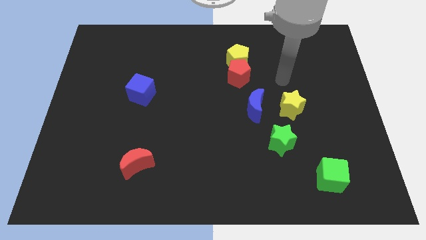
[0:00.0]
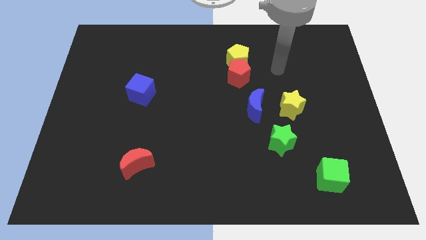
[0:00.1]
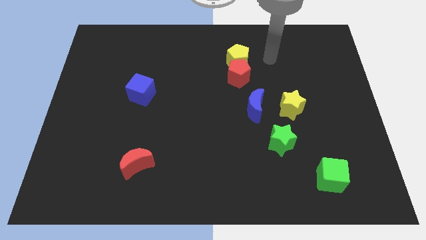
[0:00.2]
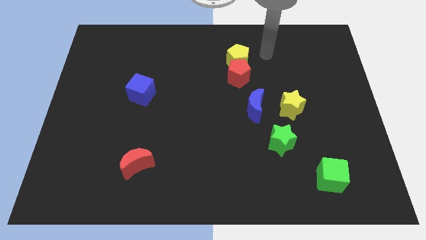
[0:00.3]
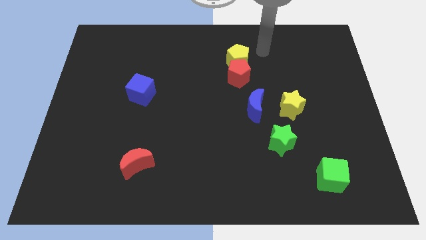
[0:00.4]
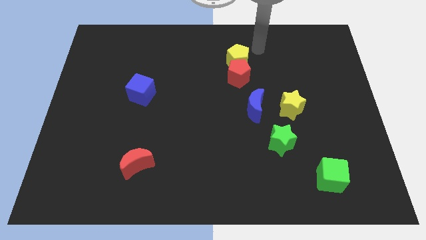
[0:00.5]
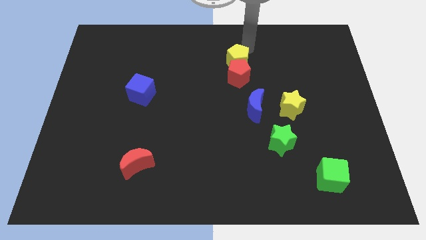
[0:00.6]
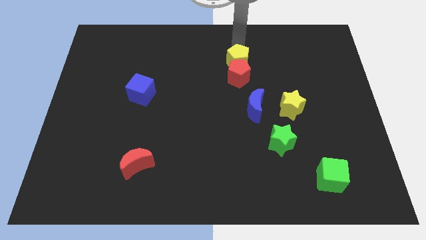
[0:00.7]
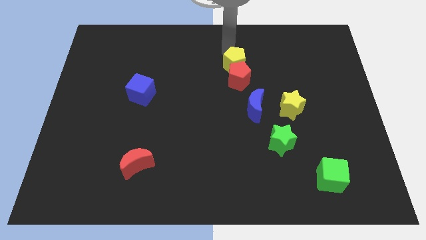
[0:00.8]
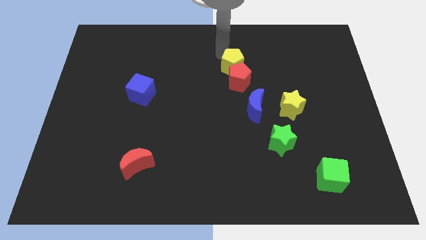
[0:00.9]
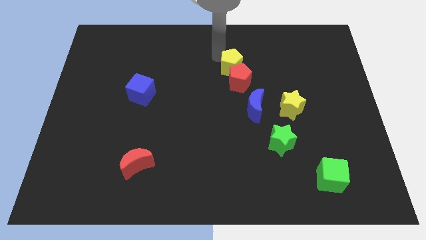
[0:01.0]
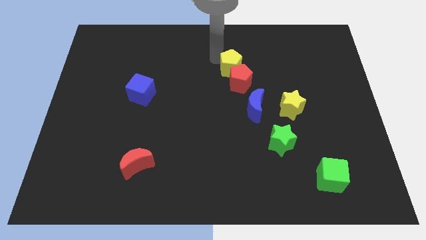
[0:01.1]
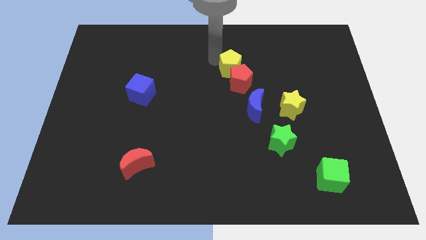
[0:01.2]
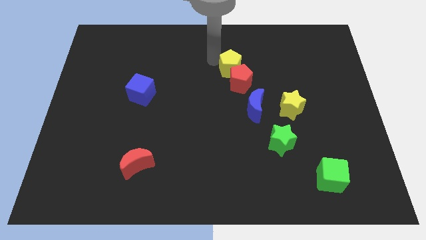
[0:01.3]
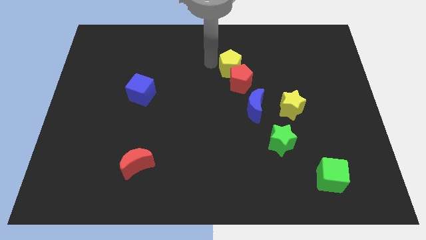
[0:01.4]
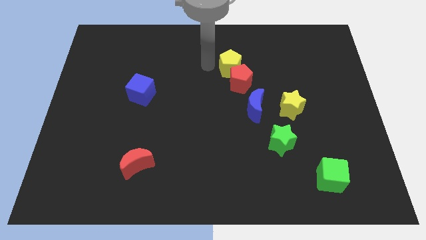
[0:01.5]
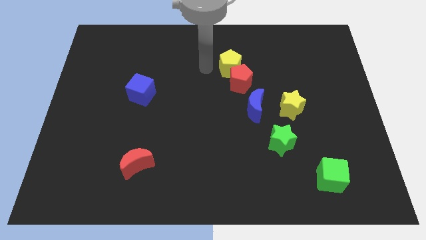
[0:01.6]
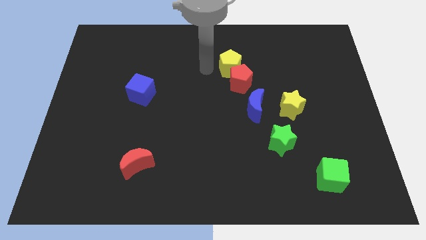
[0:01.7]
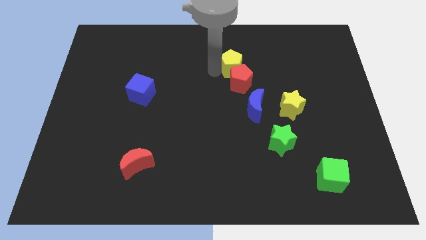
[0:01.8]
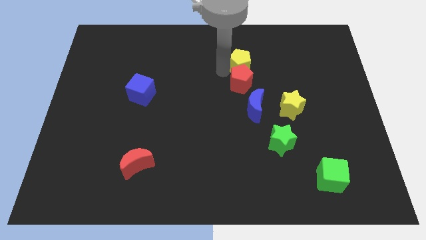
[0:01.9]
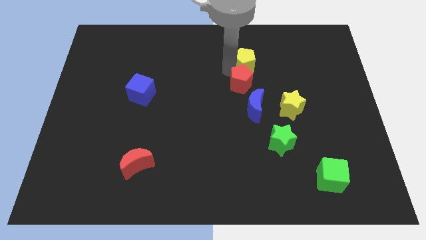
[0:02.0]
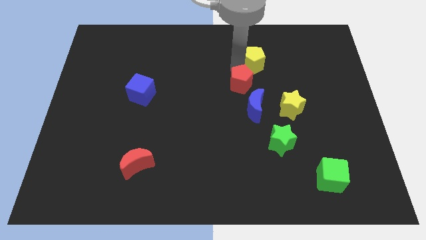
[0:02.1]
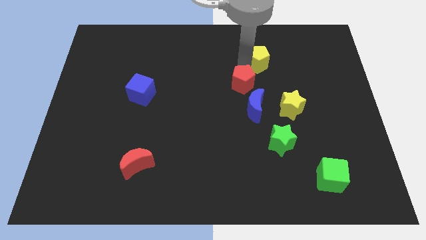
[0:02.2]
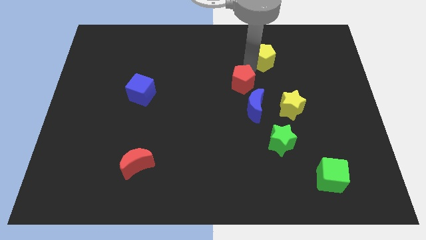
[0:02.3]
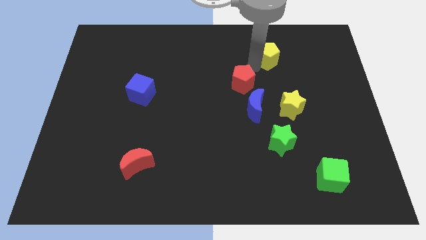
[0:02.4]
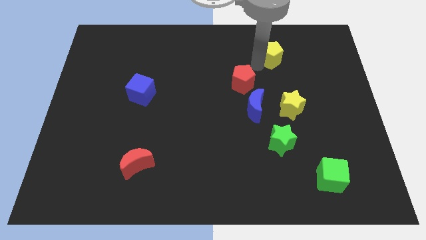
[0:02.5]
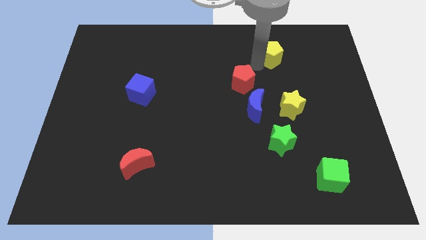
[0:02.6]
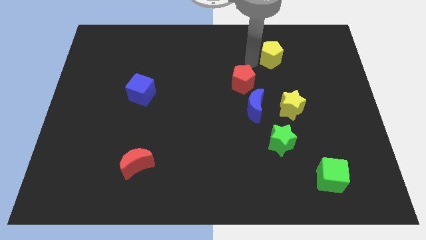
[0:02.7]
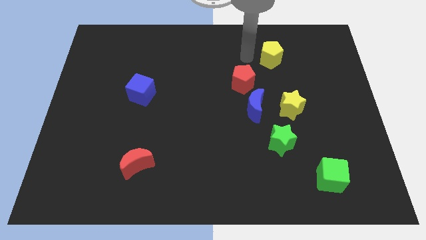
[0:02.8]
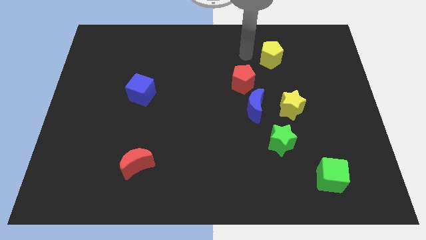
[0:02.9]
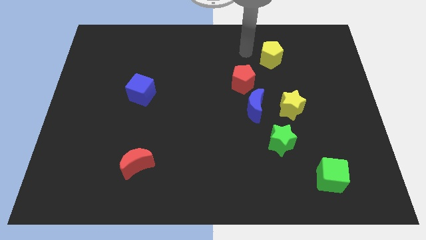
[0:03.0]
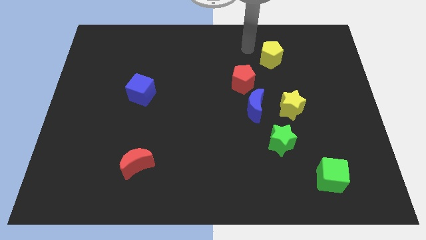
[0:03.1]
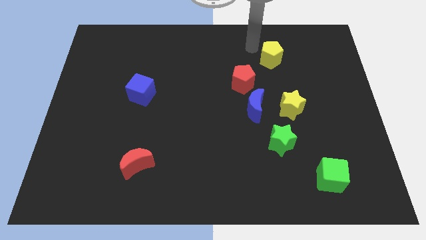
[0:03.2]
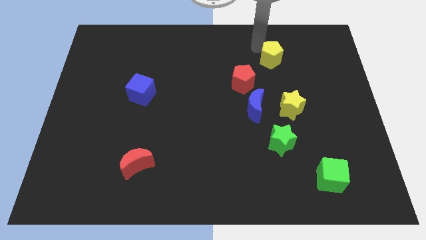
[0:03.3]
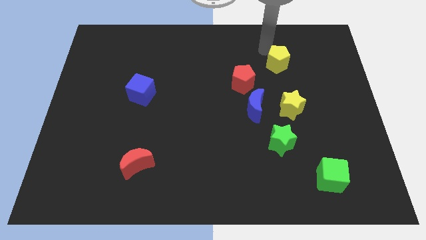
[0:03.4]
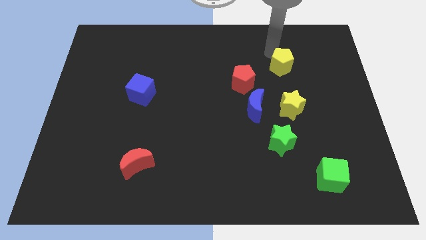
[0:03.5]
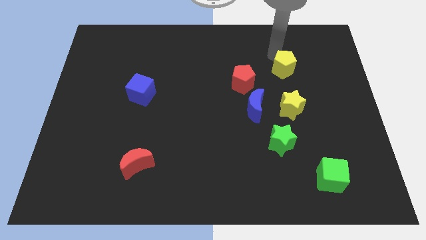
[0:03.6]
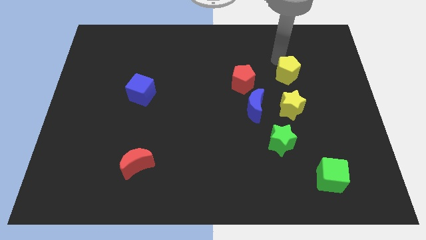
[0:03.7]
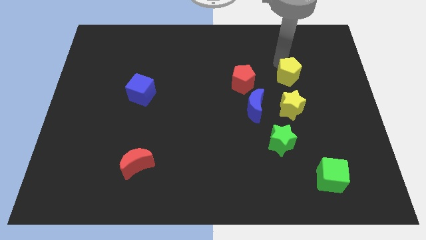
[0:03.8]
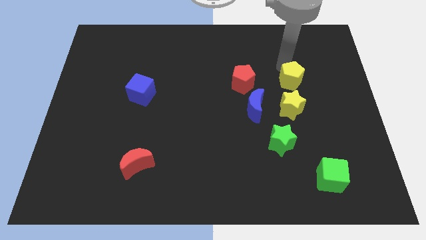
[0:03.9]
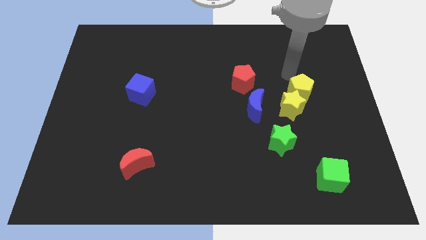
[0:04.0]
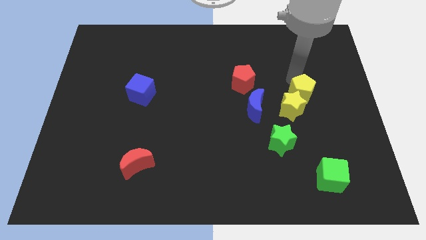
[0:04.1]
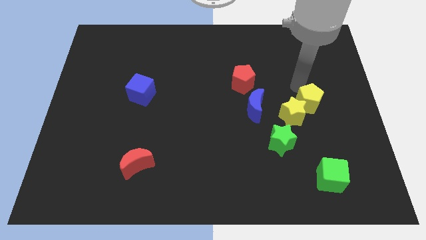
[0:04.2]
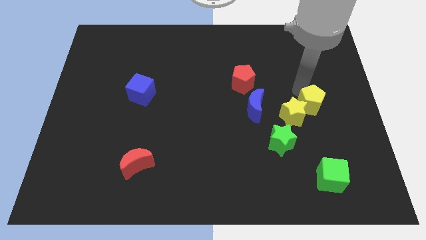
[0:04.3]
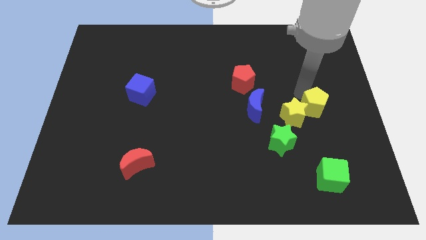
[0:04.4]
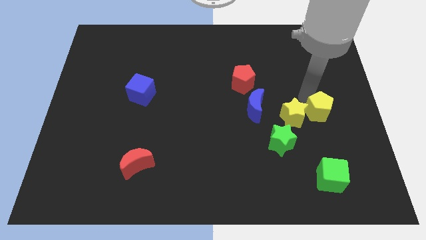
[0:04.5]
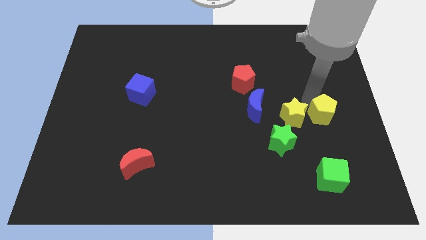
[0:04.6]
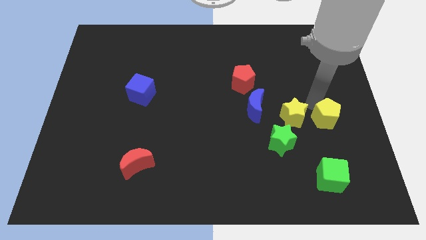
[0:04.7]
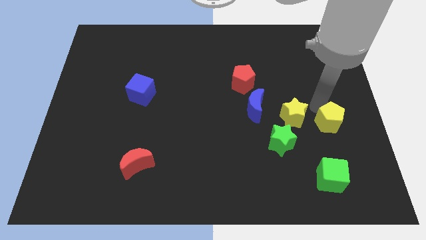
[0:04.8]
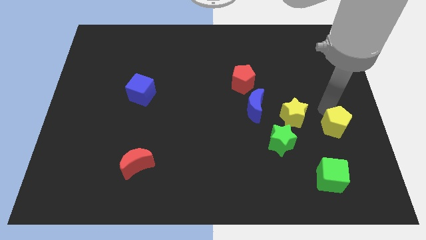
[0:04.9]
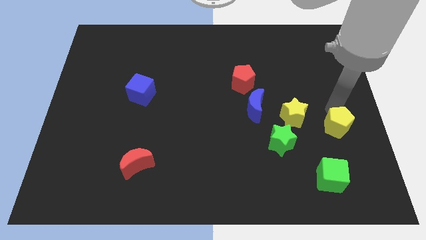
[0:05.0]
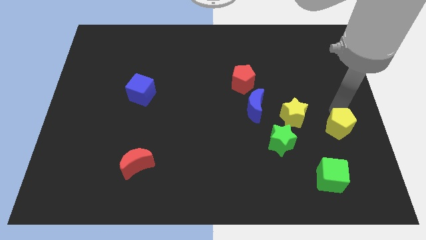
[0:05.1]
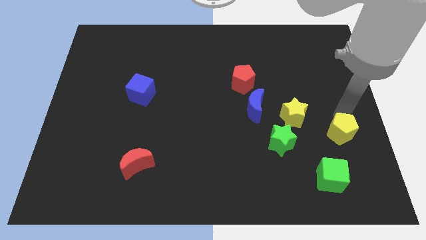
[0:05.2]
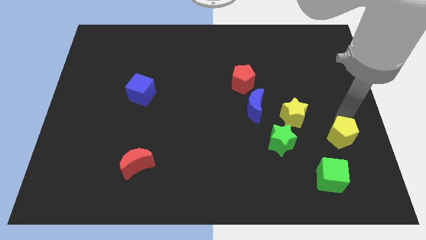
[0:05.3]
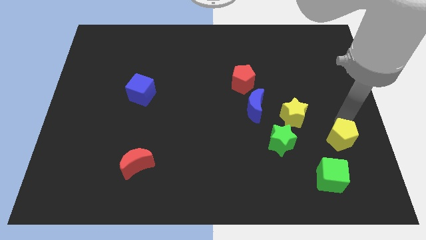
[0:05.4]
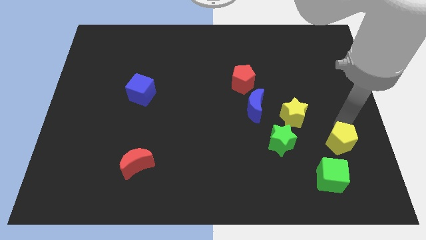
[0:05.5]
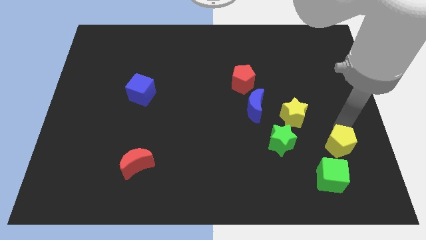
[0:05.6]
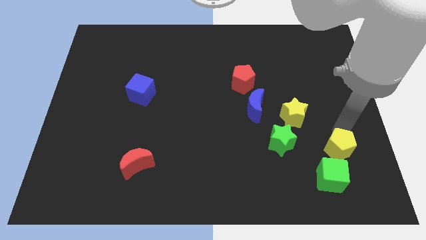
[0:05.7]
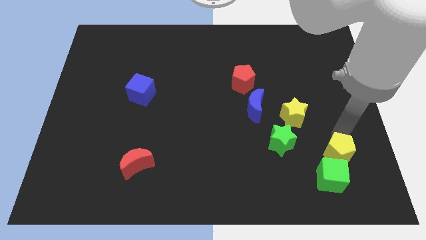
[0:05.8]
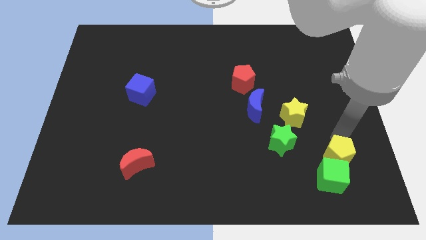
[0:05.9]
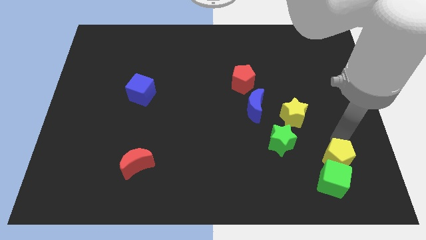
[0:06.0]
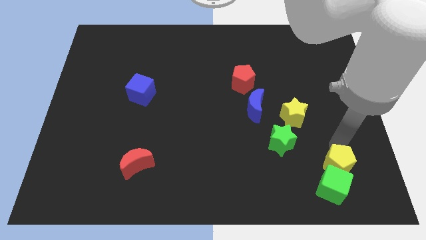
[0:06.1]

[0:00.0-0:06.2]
slide the yellow pentagon to the green cube

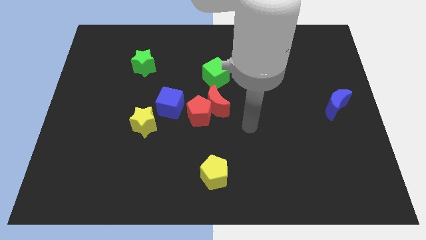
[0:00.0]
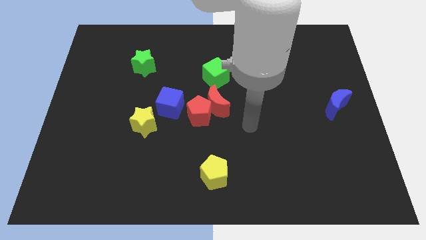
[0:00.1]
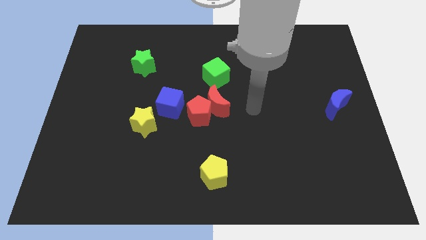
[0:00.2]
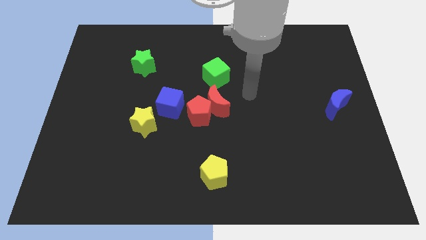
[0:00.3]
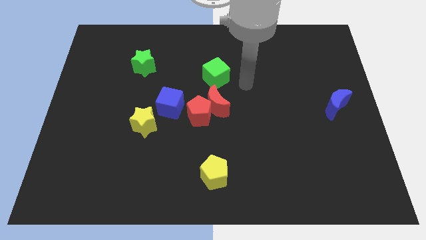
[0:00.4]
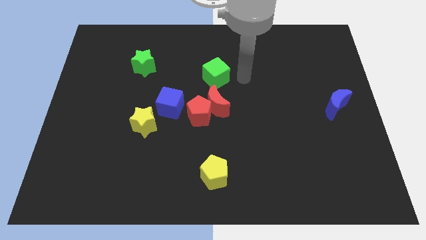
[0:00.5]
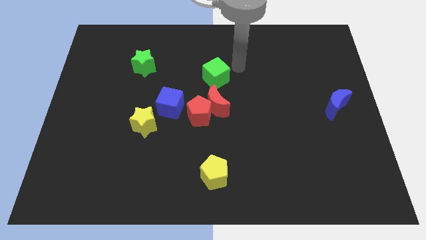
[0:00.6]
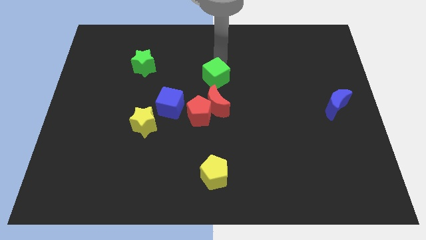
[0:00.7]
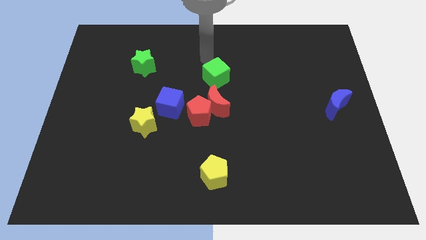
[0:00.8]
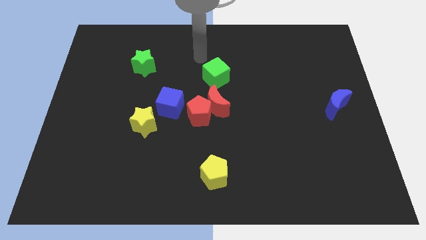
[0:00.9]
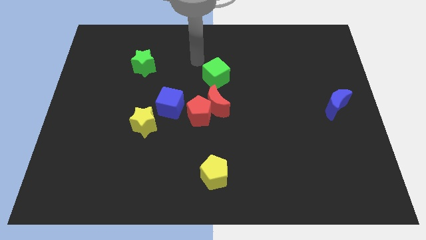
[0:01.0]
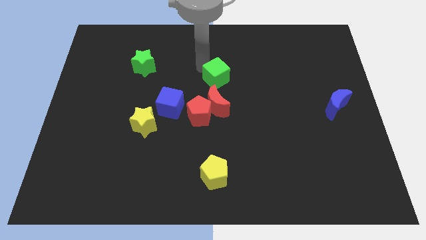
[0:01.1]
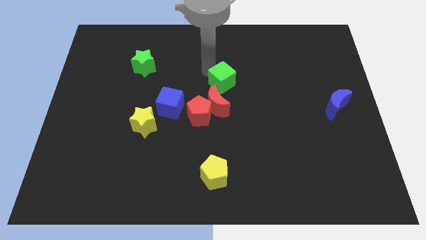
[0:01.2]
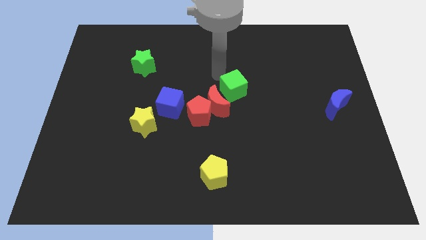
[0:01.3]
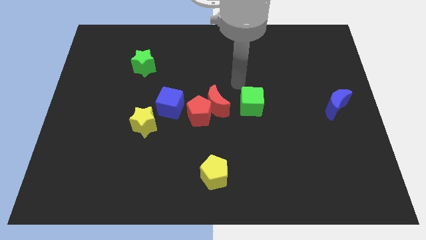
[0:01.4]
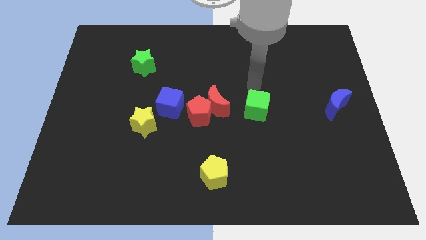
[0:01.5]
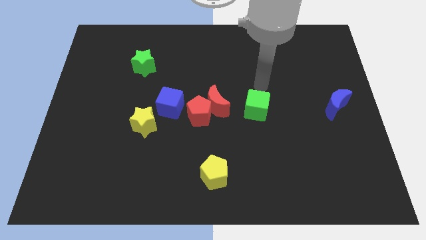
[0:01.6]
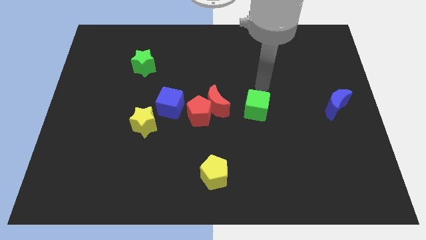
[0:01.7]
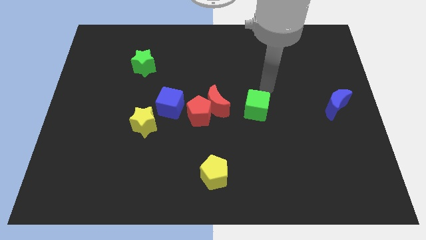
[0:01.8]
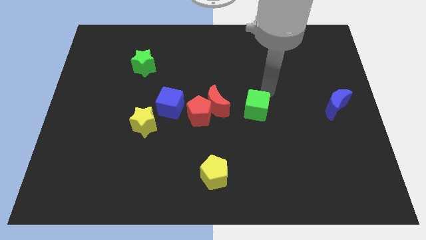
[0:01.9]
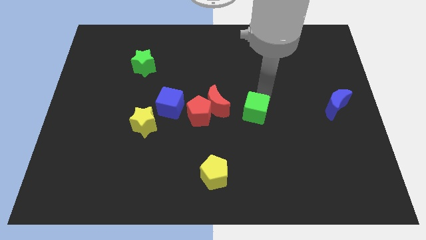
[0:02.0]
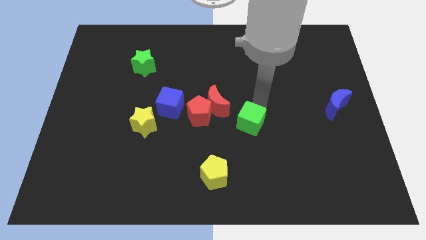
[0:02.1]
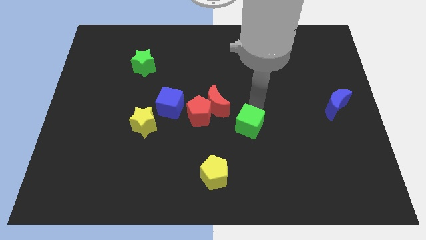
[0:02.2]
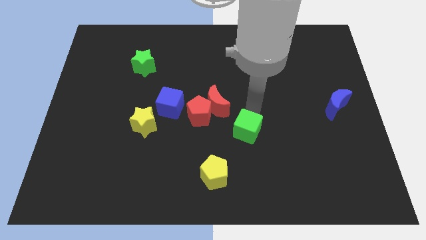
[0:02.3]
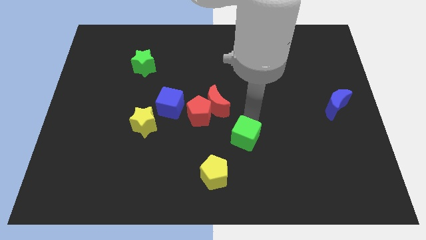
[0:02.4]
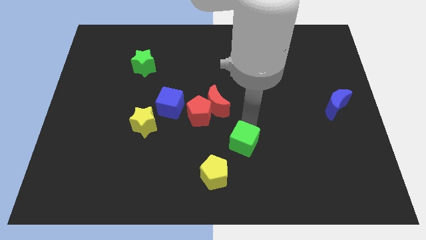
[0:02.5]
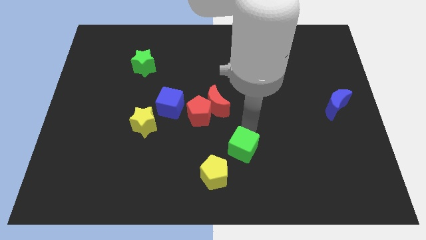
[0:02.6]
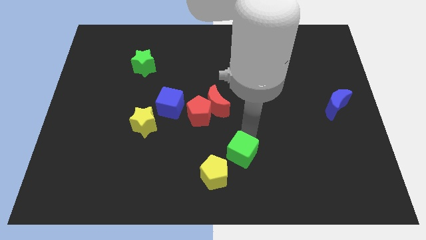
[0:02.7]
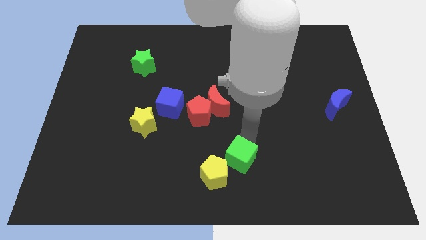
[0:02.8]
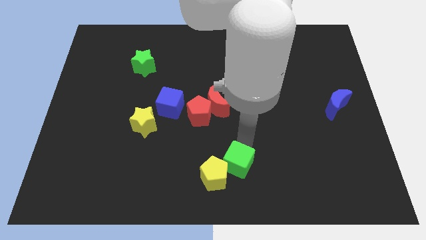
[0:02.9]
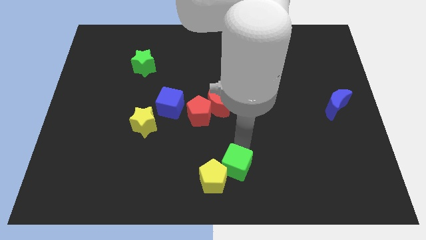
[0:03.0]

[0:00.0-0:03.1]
put the green cube close to the yellow pentagon
